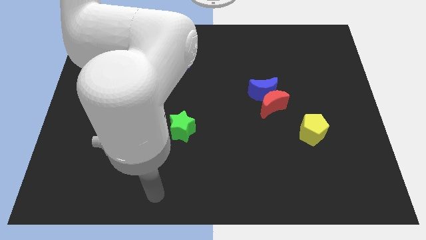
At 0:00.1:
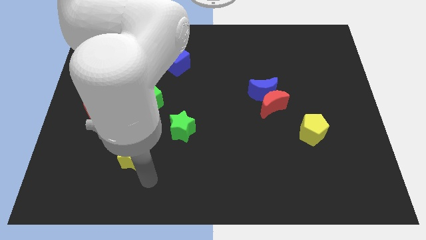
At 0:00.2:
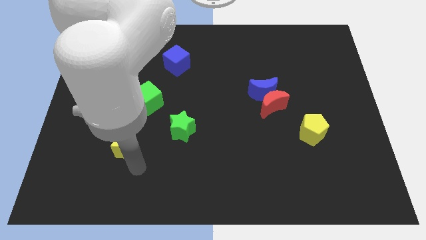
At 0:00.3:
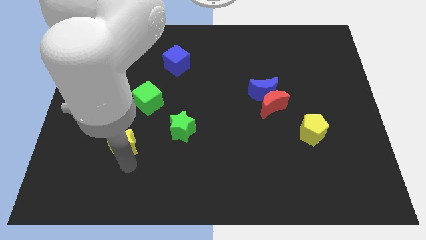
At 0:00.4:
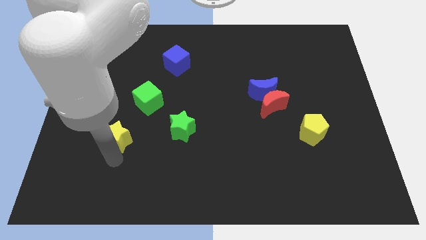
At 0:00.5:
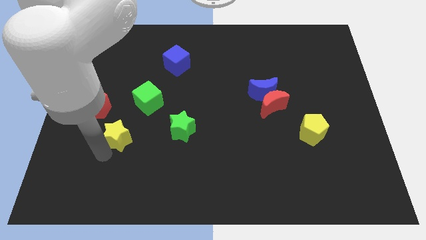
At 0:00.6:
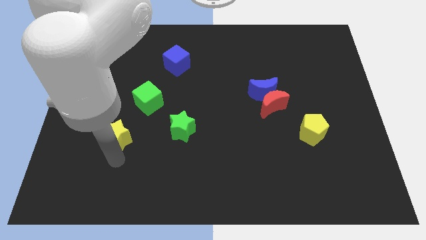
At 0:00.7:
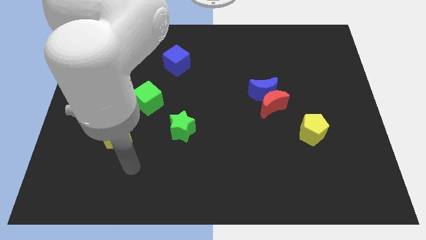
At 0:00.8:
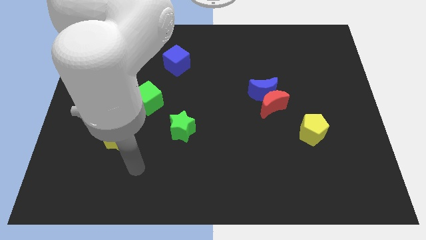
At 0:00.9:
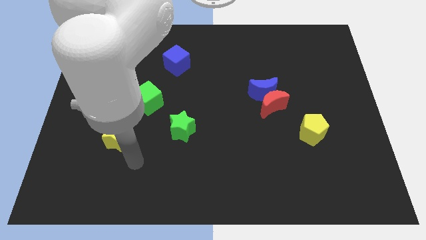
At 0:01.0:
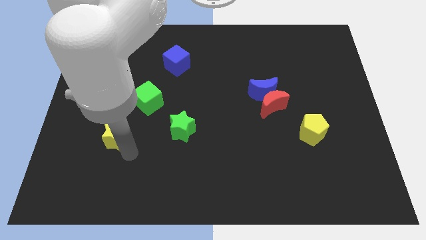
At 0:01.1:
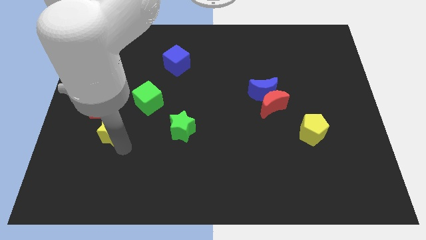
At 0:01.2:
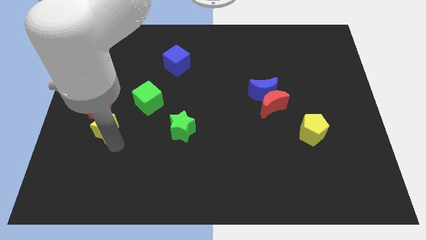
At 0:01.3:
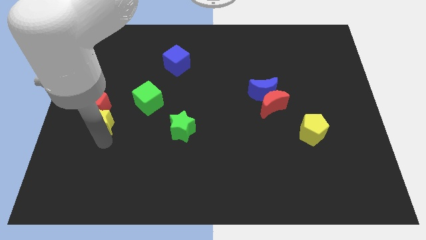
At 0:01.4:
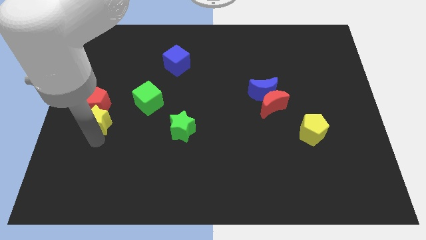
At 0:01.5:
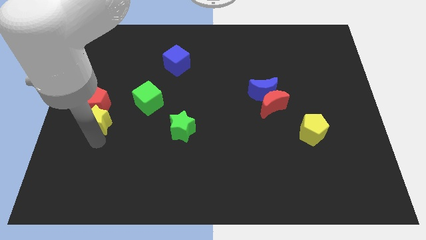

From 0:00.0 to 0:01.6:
push the yellow star into the red pentagon

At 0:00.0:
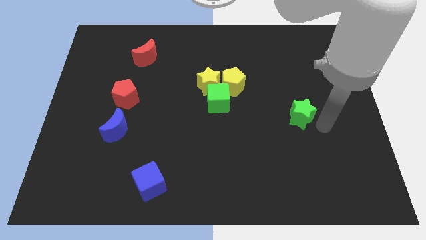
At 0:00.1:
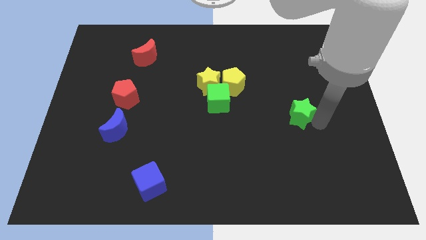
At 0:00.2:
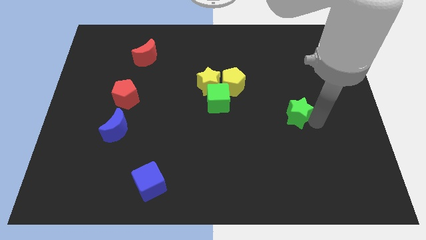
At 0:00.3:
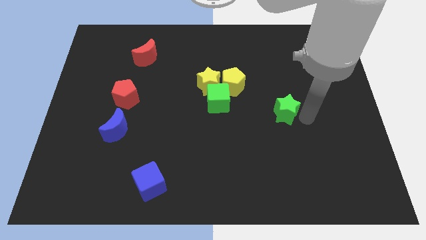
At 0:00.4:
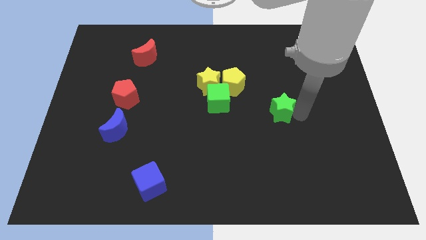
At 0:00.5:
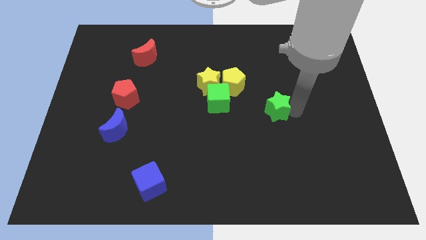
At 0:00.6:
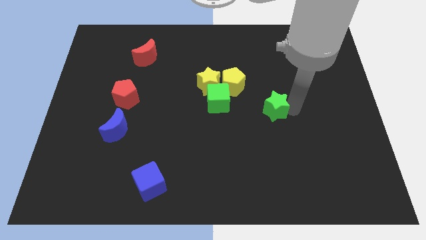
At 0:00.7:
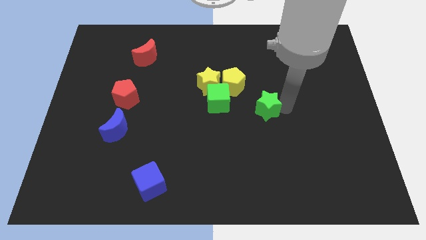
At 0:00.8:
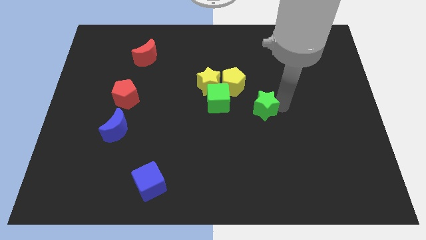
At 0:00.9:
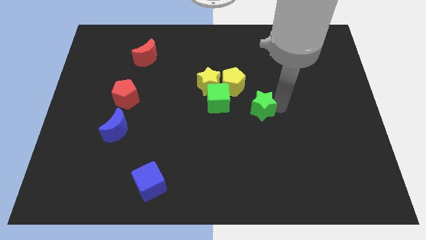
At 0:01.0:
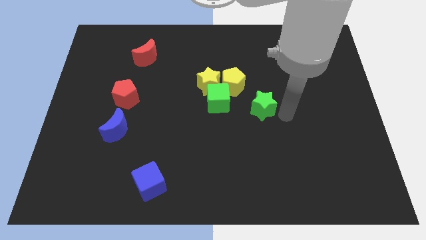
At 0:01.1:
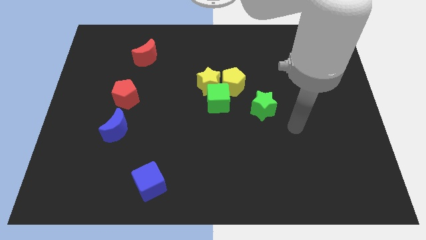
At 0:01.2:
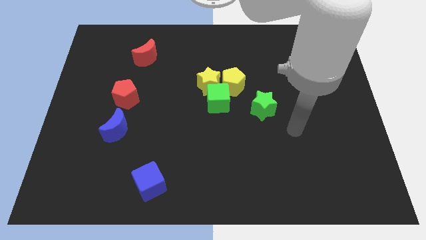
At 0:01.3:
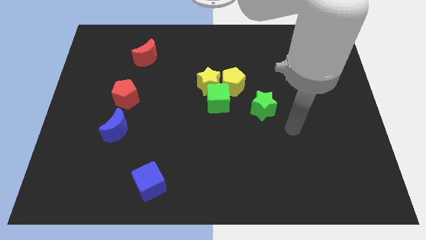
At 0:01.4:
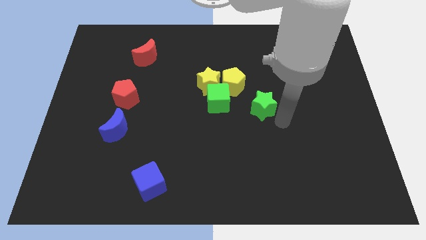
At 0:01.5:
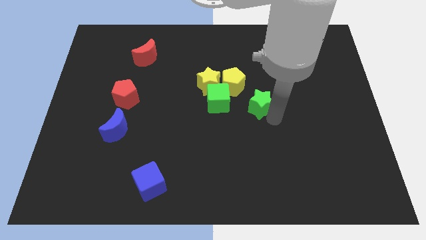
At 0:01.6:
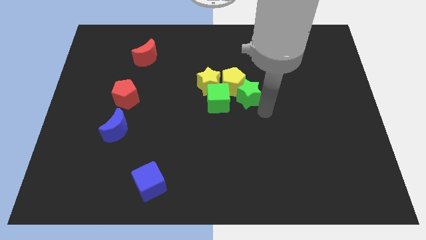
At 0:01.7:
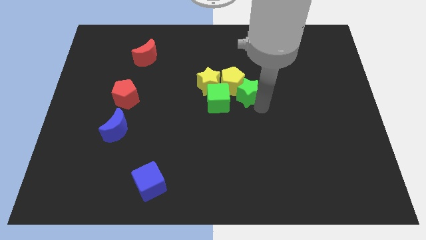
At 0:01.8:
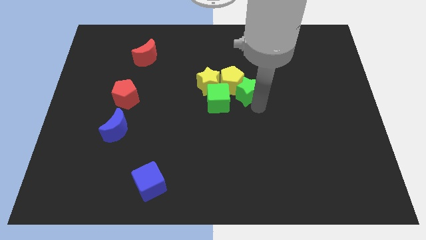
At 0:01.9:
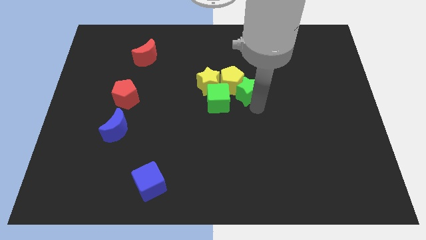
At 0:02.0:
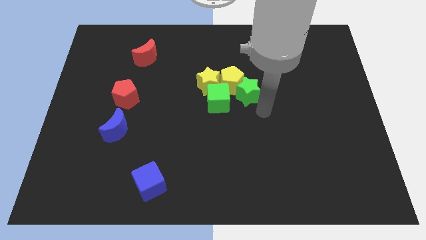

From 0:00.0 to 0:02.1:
push the green star to the center of the table

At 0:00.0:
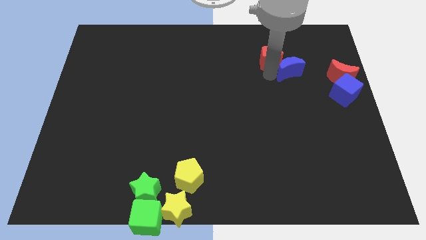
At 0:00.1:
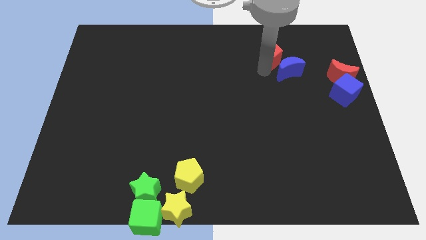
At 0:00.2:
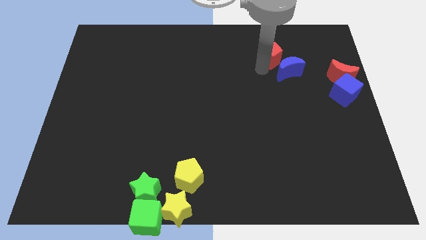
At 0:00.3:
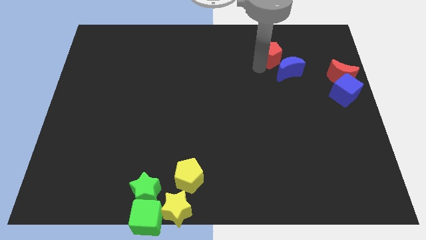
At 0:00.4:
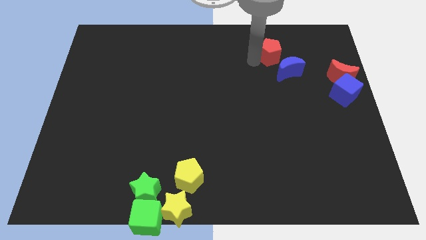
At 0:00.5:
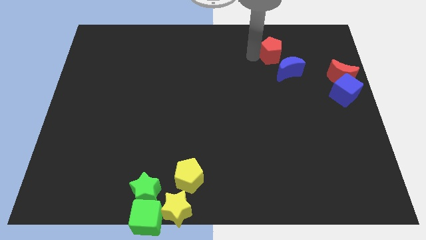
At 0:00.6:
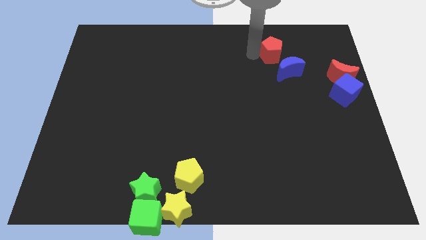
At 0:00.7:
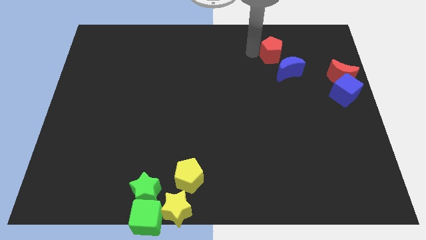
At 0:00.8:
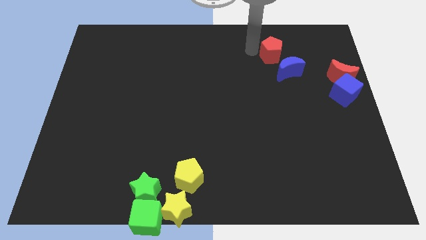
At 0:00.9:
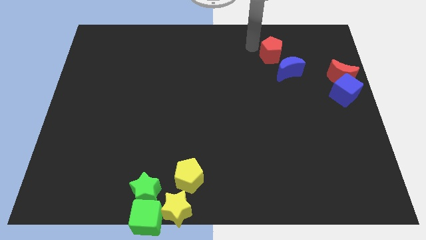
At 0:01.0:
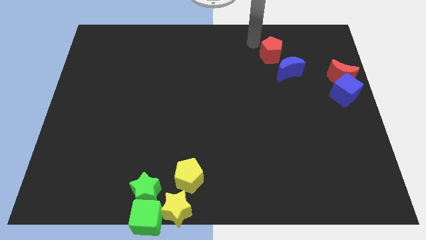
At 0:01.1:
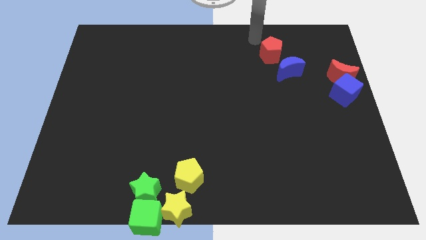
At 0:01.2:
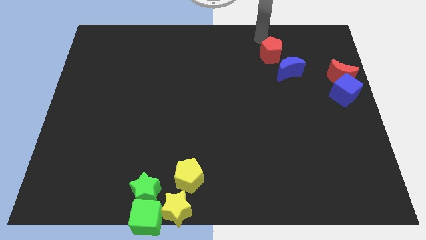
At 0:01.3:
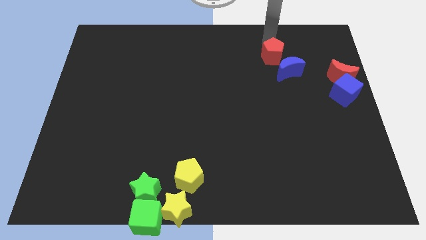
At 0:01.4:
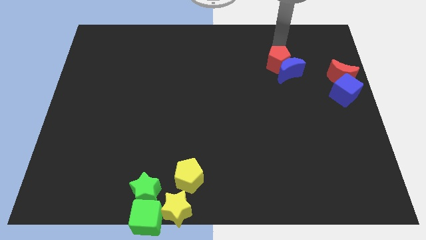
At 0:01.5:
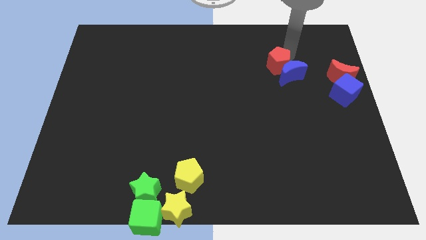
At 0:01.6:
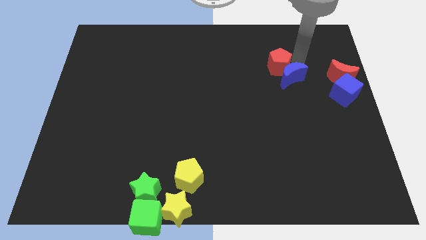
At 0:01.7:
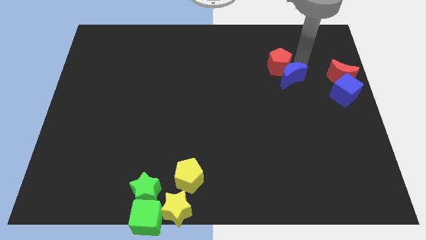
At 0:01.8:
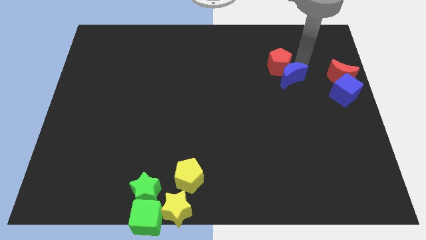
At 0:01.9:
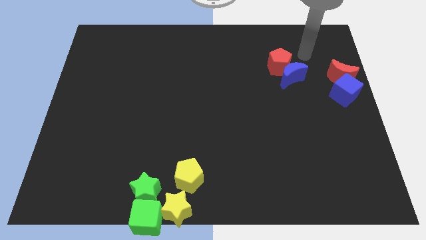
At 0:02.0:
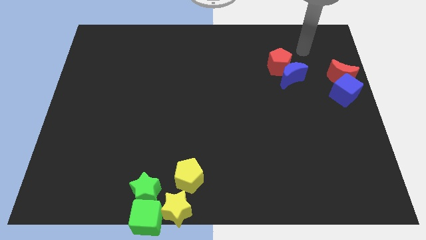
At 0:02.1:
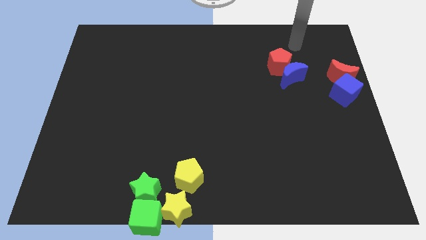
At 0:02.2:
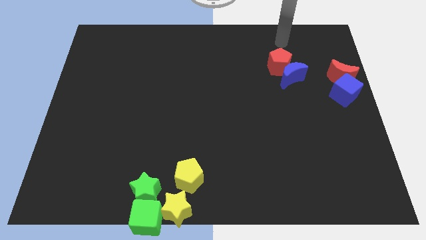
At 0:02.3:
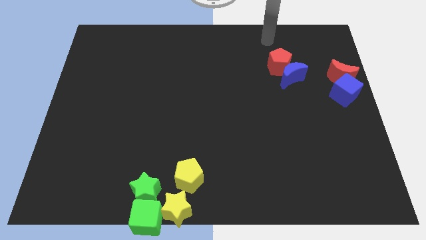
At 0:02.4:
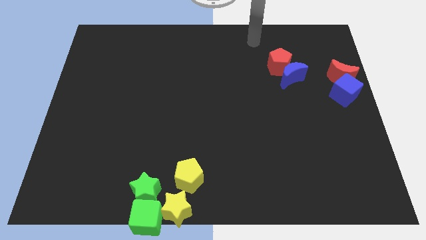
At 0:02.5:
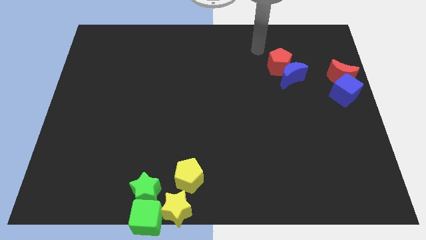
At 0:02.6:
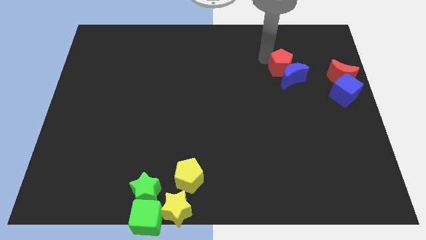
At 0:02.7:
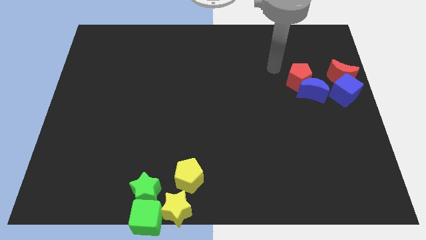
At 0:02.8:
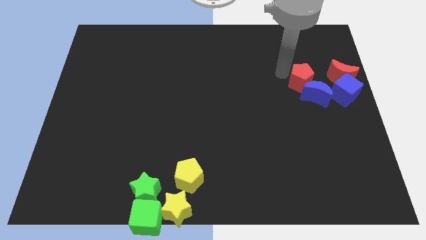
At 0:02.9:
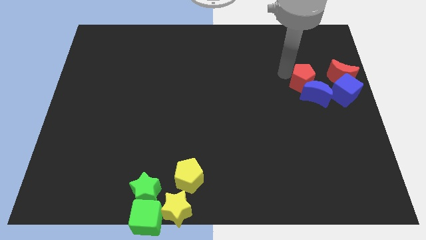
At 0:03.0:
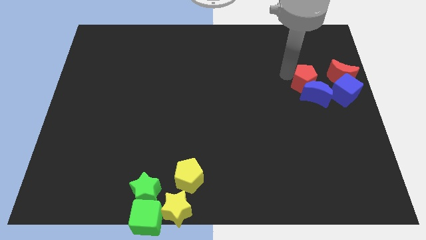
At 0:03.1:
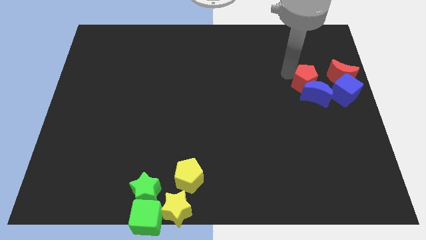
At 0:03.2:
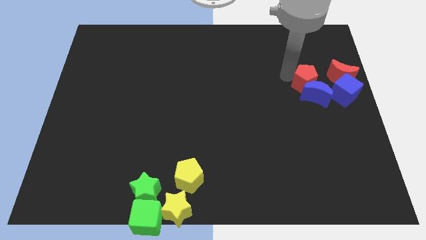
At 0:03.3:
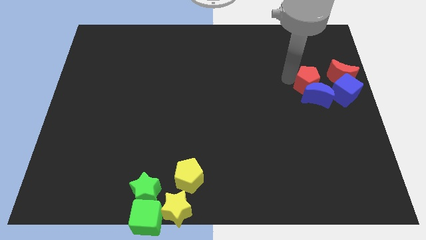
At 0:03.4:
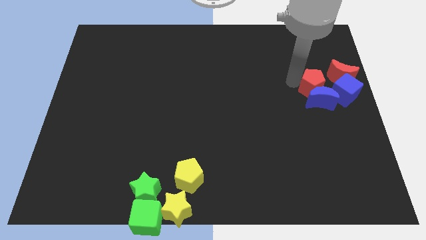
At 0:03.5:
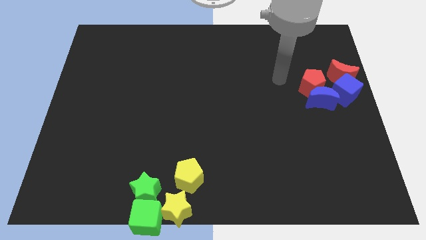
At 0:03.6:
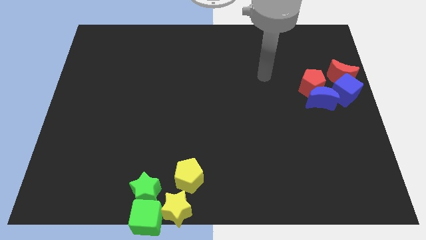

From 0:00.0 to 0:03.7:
move the red pentagon along with blue crescent to the left of the blue cube

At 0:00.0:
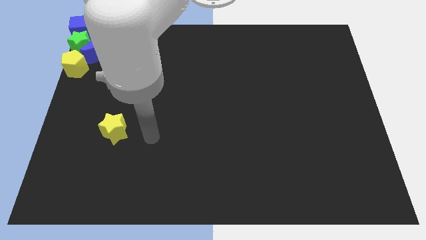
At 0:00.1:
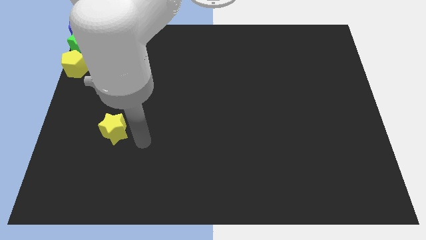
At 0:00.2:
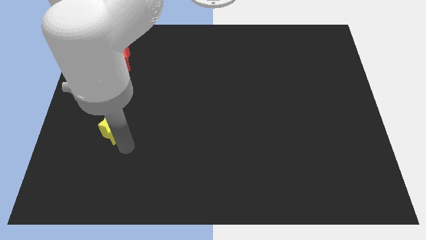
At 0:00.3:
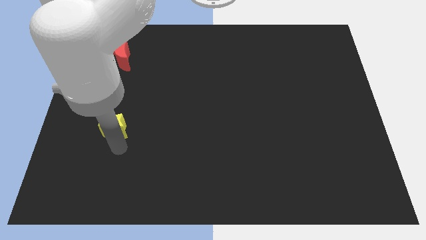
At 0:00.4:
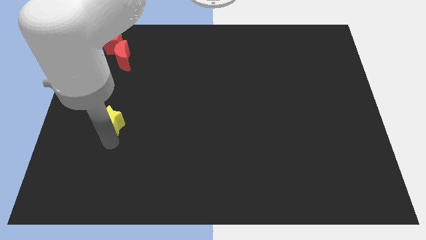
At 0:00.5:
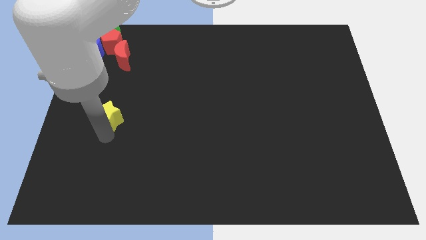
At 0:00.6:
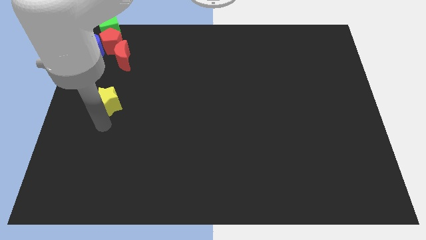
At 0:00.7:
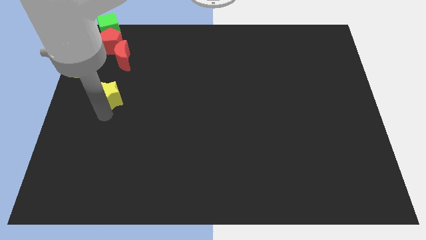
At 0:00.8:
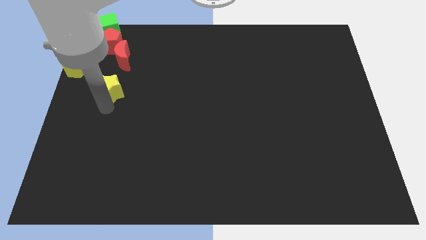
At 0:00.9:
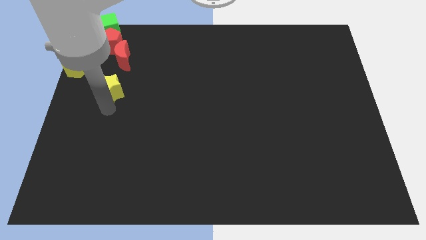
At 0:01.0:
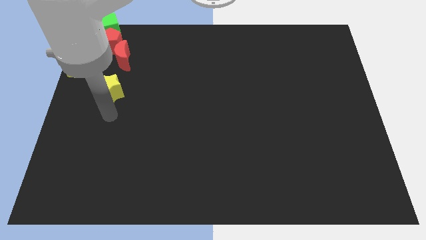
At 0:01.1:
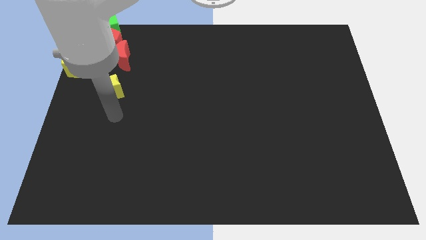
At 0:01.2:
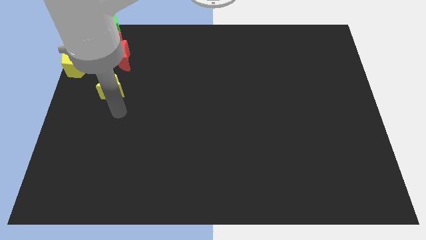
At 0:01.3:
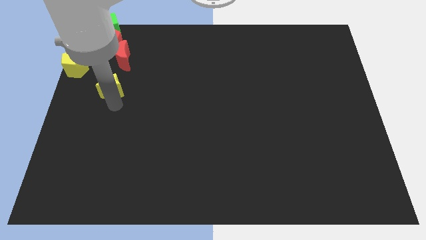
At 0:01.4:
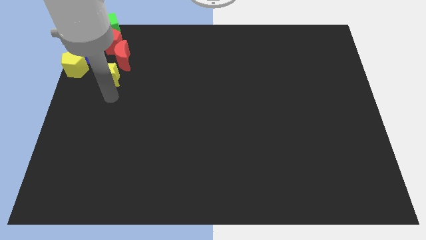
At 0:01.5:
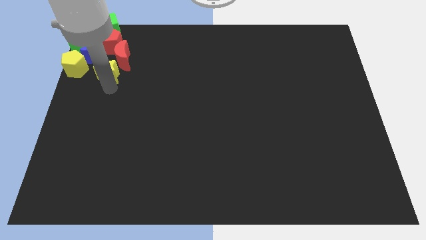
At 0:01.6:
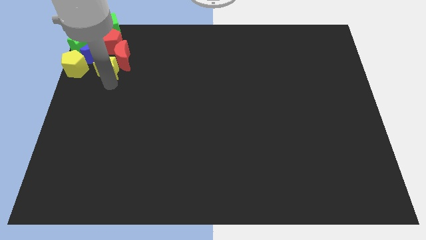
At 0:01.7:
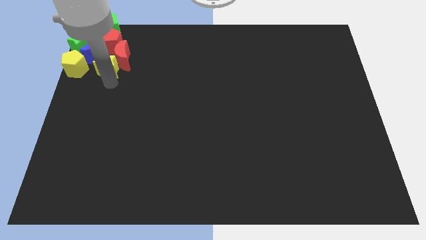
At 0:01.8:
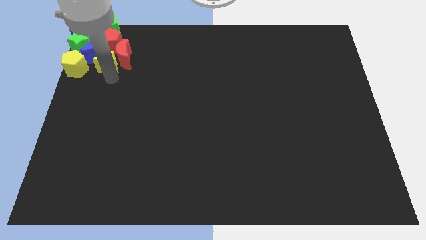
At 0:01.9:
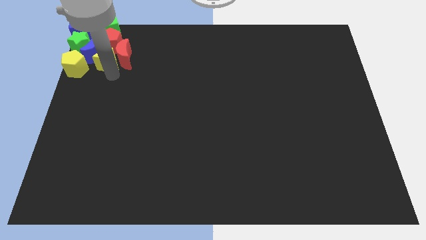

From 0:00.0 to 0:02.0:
push the yellow star into group of blocks
